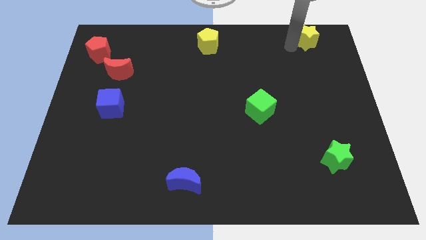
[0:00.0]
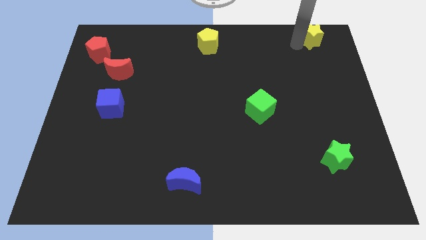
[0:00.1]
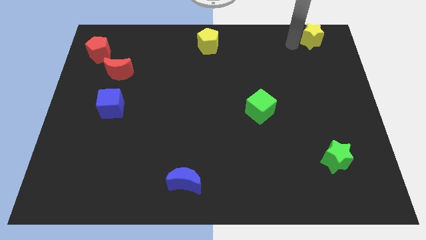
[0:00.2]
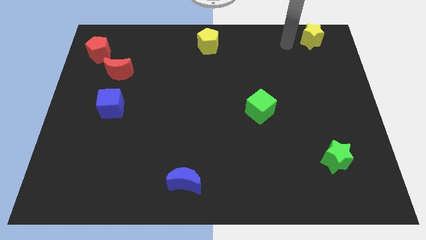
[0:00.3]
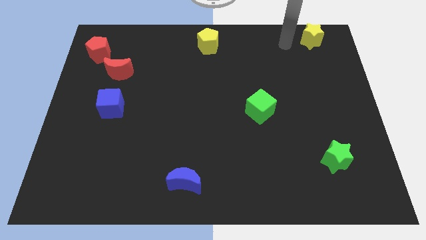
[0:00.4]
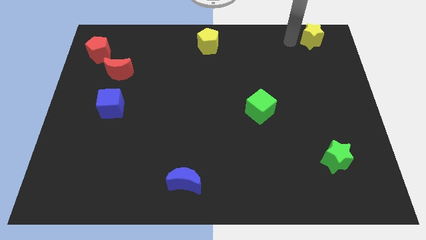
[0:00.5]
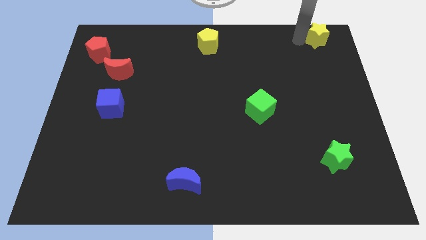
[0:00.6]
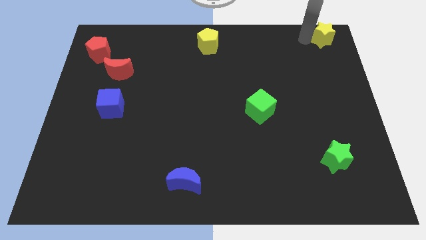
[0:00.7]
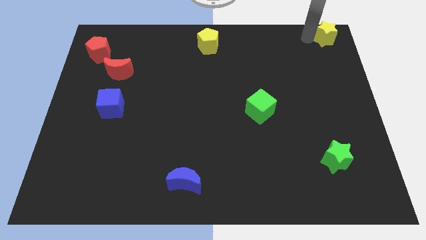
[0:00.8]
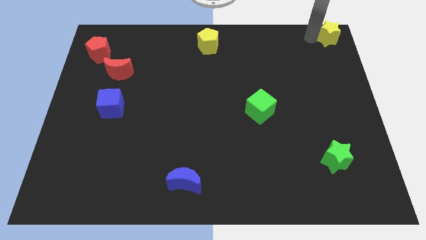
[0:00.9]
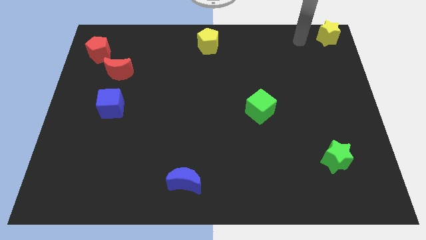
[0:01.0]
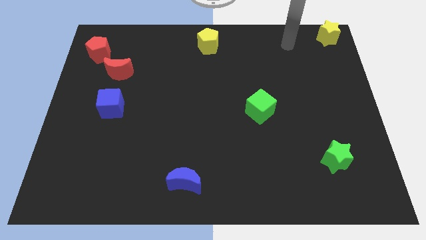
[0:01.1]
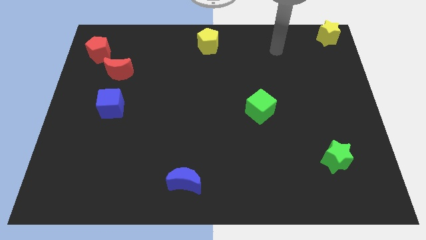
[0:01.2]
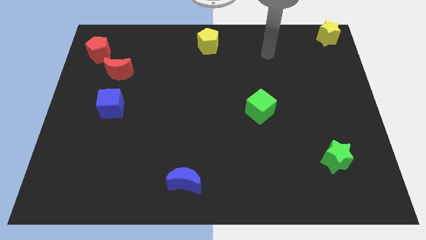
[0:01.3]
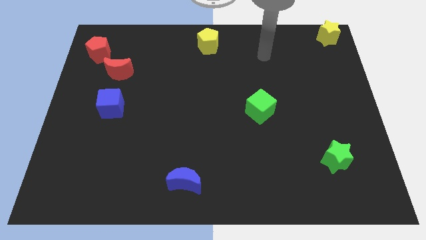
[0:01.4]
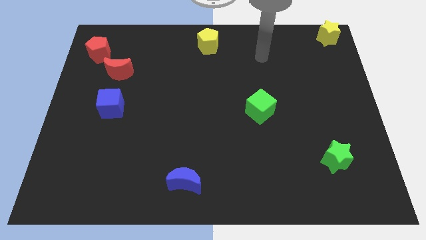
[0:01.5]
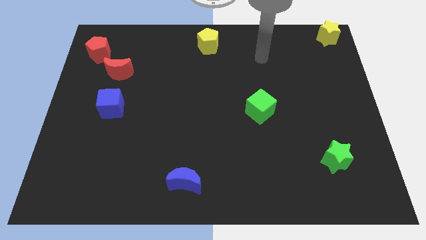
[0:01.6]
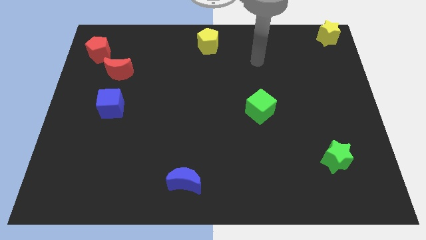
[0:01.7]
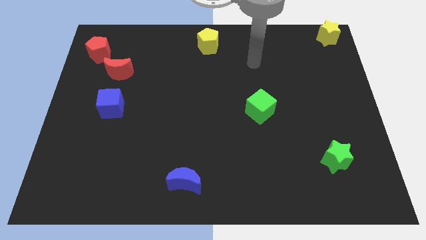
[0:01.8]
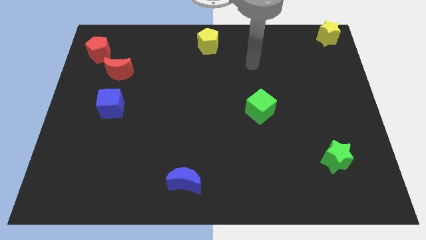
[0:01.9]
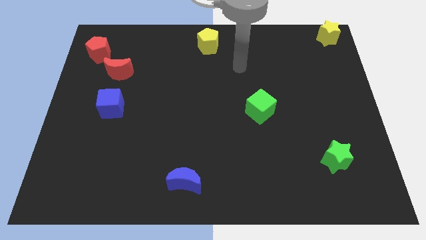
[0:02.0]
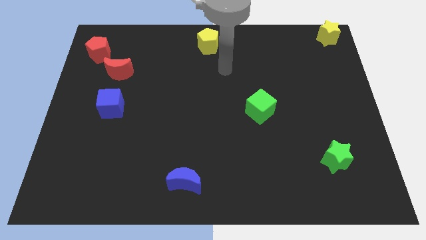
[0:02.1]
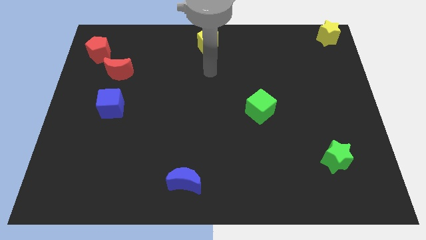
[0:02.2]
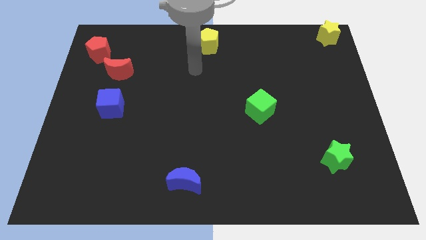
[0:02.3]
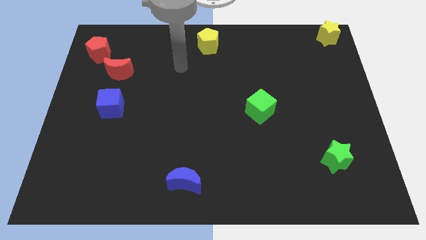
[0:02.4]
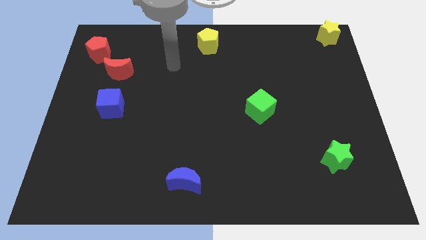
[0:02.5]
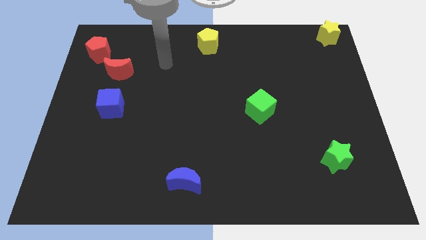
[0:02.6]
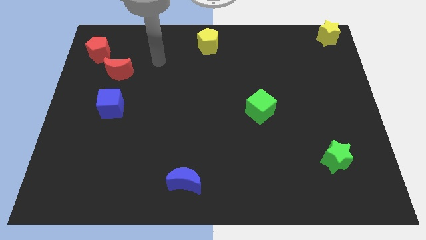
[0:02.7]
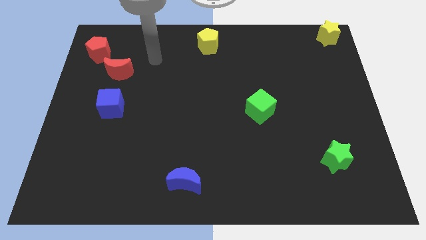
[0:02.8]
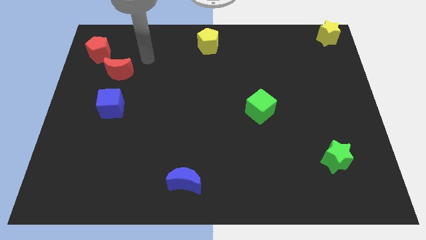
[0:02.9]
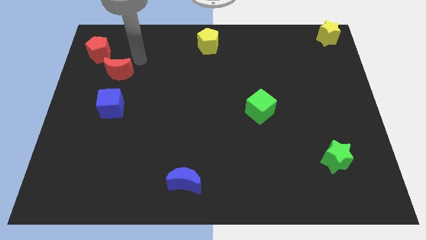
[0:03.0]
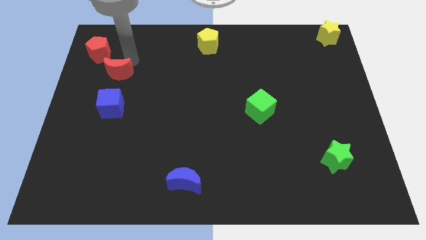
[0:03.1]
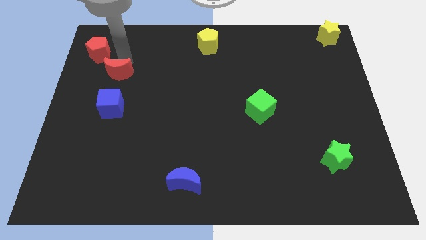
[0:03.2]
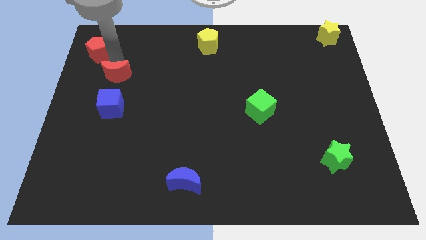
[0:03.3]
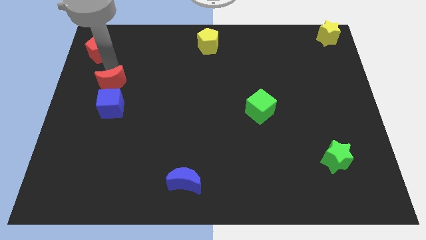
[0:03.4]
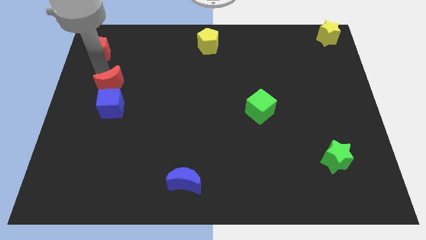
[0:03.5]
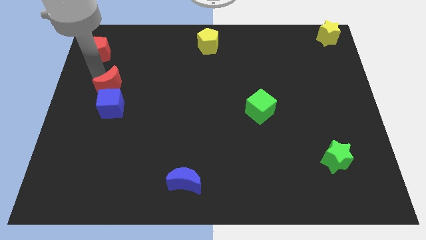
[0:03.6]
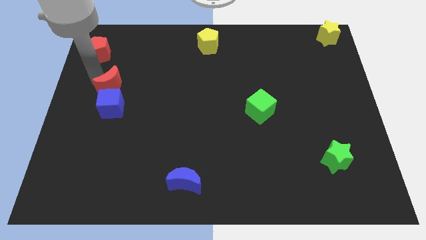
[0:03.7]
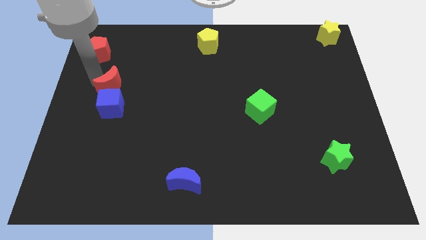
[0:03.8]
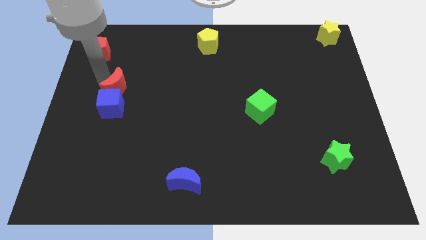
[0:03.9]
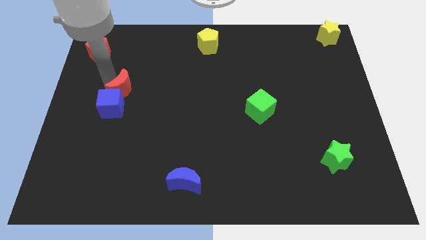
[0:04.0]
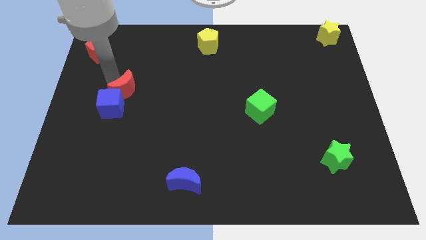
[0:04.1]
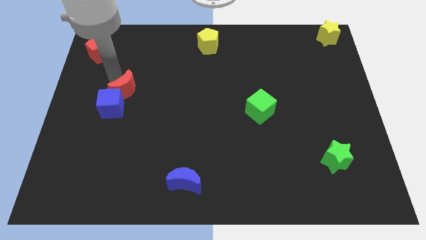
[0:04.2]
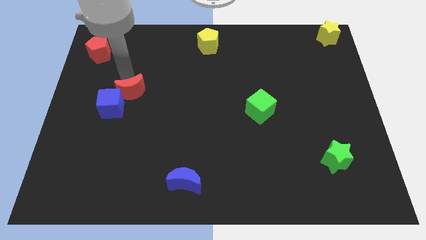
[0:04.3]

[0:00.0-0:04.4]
move your arm away from the yellow star

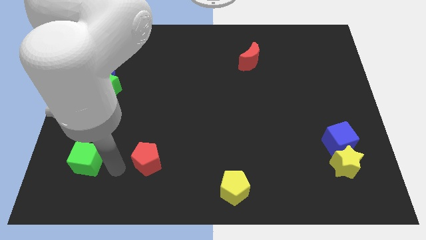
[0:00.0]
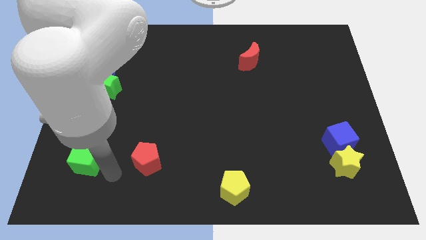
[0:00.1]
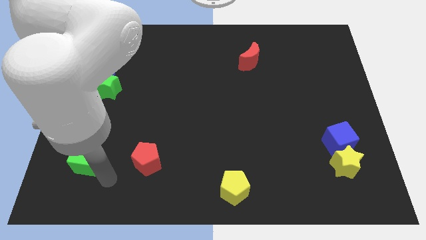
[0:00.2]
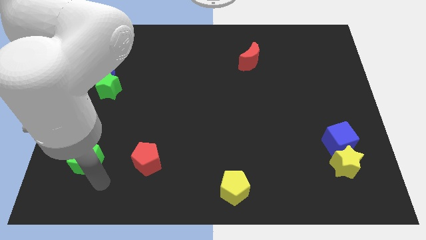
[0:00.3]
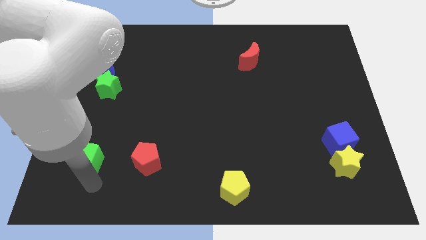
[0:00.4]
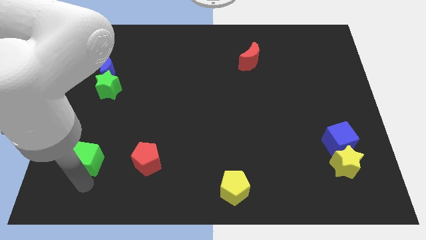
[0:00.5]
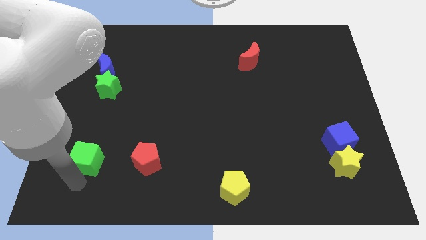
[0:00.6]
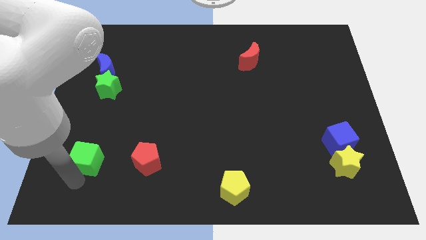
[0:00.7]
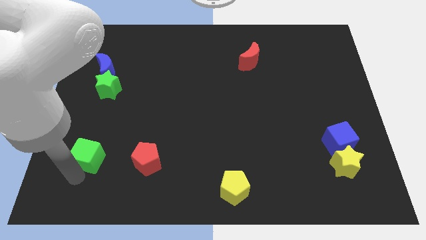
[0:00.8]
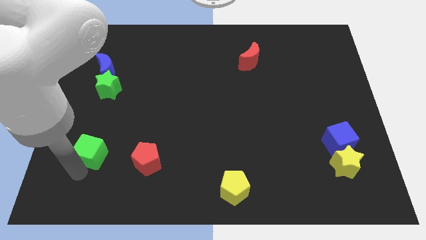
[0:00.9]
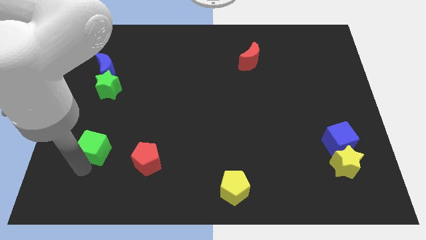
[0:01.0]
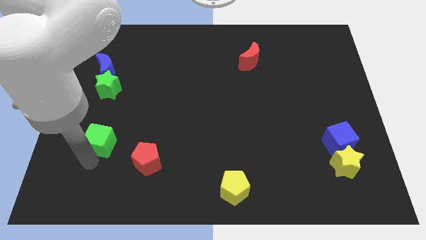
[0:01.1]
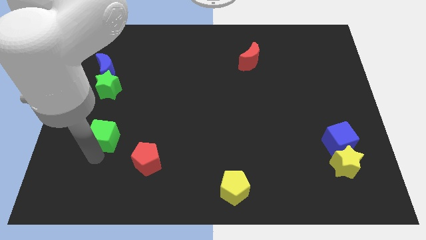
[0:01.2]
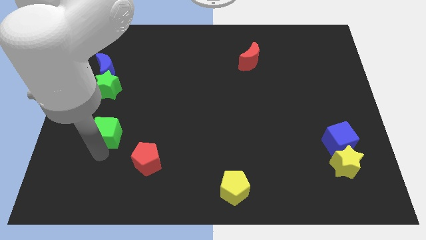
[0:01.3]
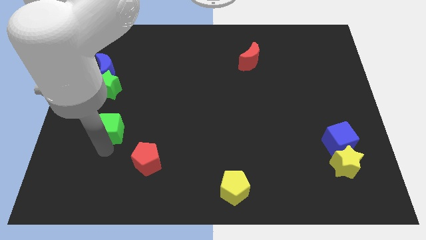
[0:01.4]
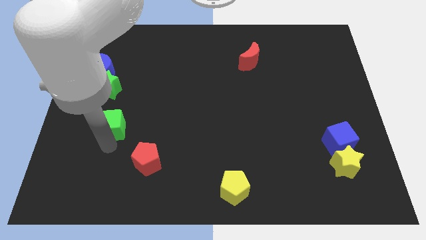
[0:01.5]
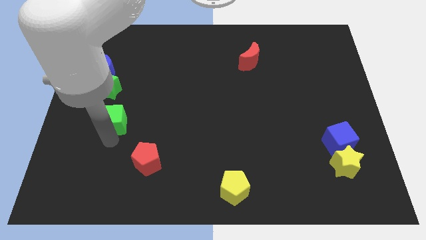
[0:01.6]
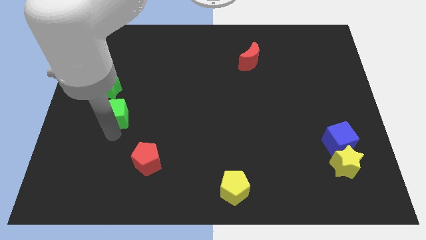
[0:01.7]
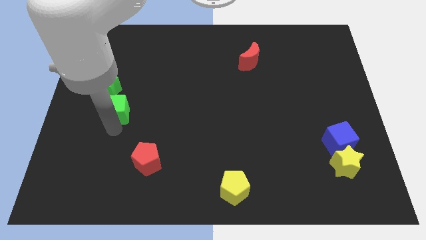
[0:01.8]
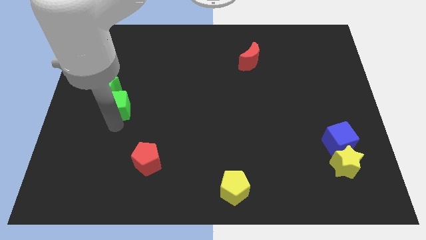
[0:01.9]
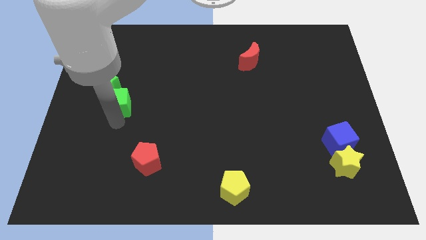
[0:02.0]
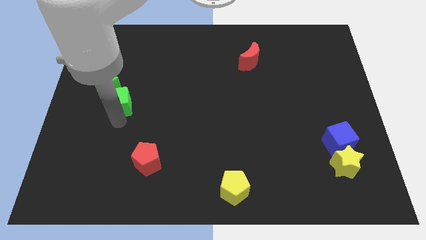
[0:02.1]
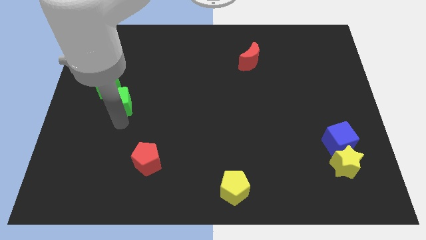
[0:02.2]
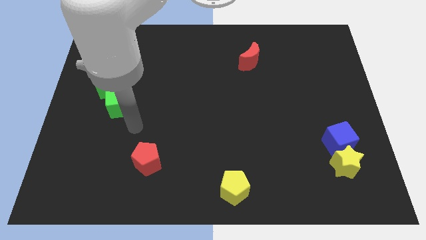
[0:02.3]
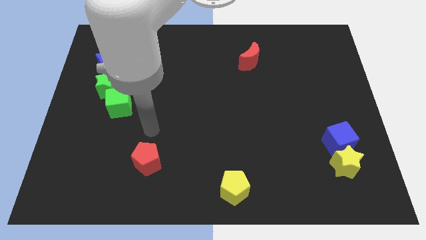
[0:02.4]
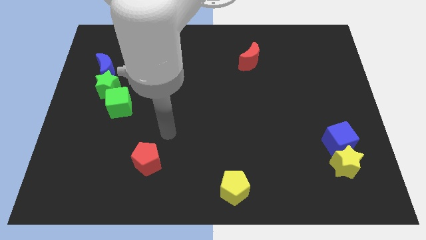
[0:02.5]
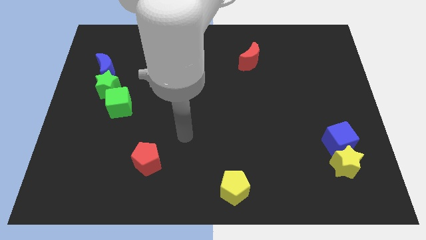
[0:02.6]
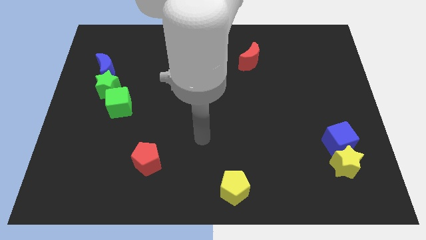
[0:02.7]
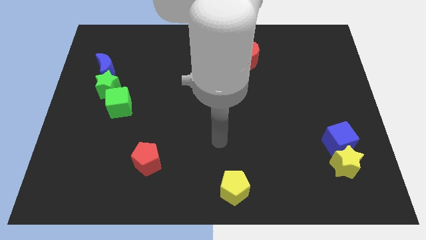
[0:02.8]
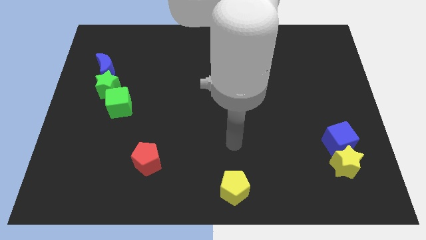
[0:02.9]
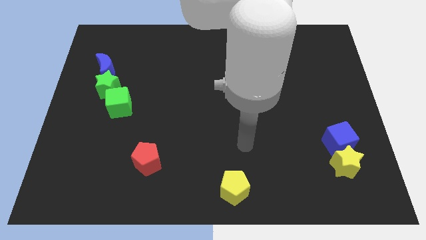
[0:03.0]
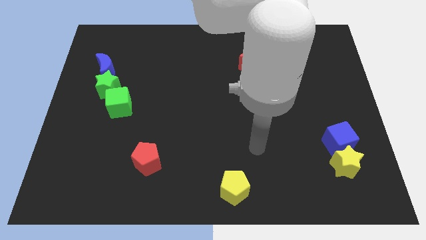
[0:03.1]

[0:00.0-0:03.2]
move the green cube to the bottom of the green star

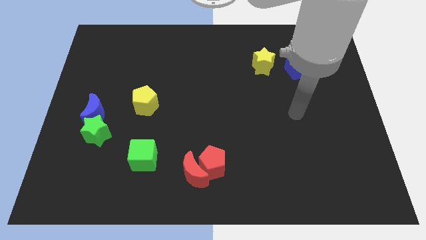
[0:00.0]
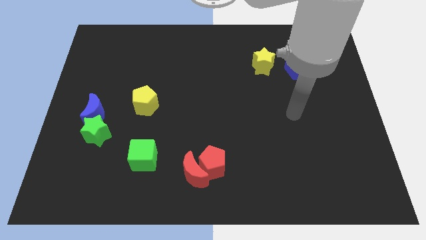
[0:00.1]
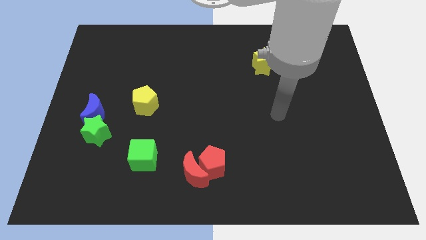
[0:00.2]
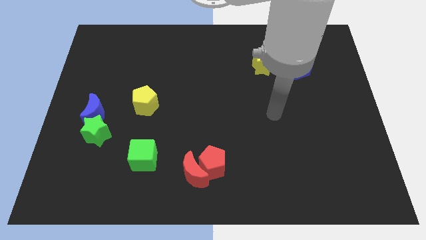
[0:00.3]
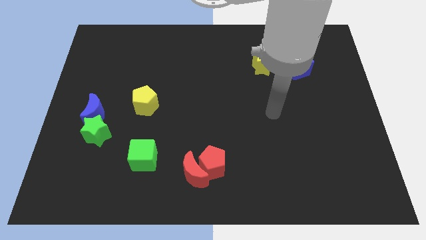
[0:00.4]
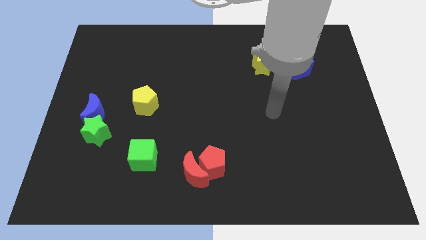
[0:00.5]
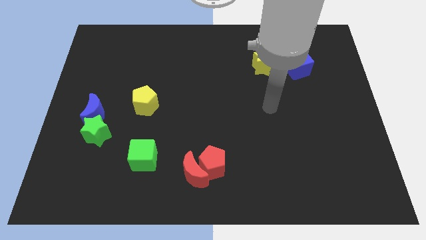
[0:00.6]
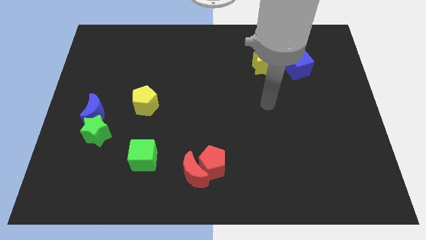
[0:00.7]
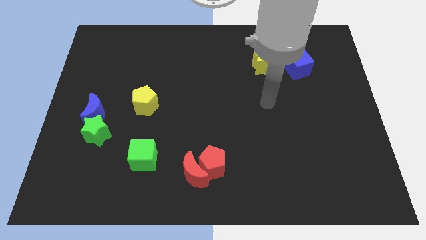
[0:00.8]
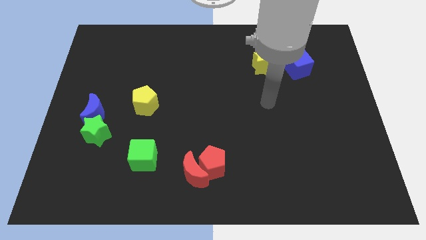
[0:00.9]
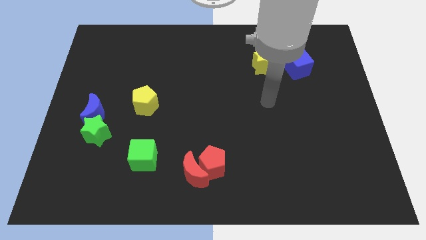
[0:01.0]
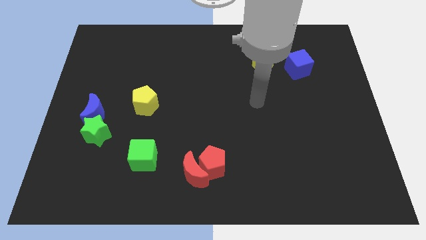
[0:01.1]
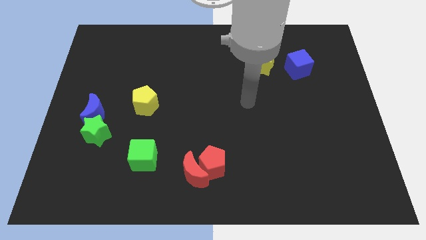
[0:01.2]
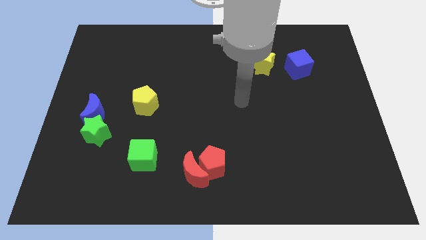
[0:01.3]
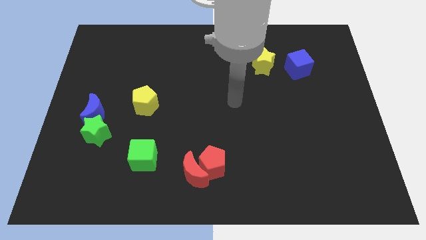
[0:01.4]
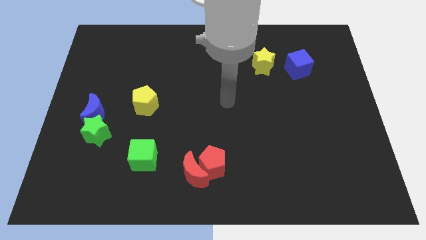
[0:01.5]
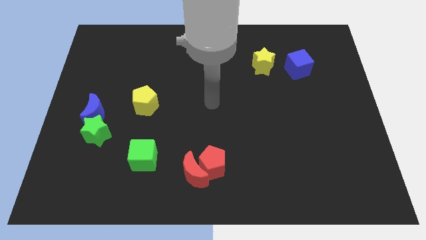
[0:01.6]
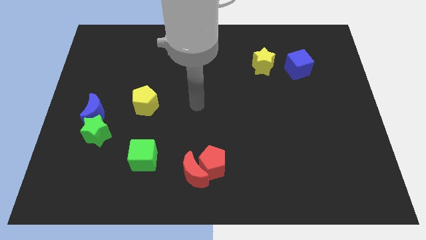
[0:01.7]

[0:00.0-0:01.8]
place your arm to the center of the board
